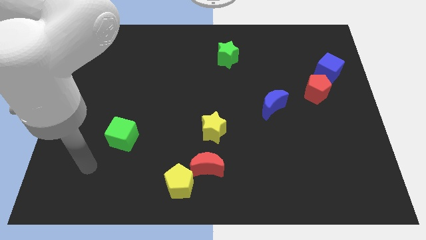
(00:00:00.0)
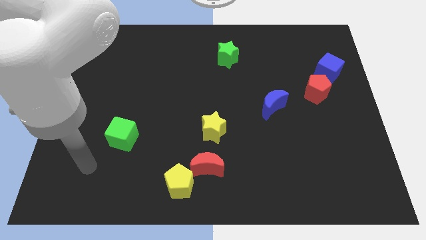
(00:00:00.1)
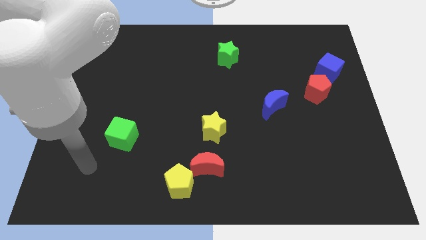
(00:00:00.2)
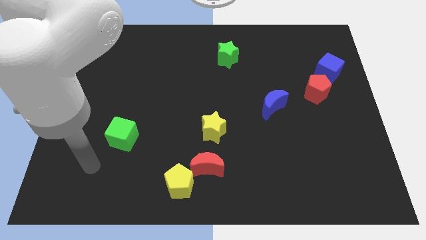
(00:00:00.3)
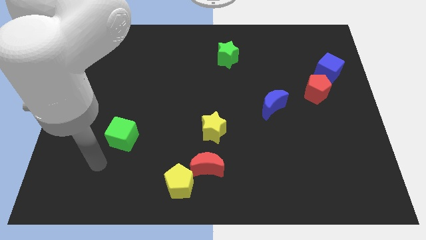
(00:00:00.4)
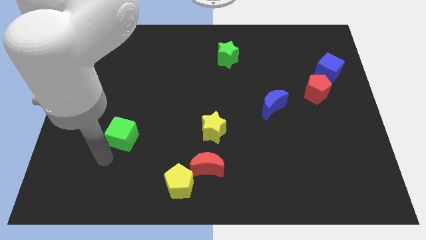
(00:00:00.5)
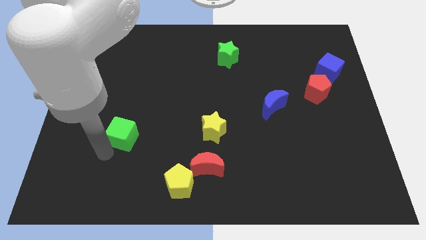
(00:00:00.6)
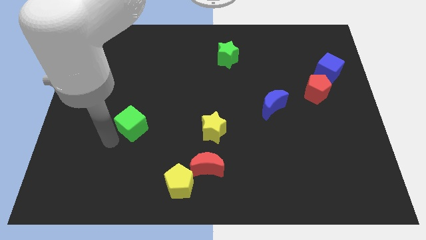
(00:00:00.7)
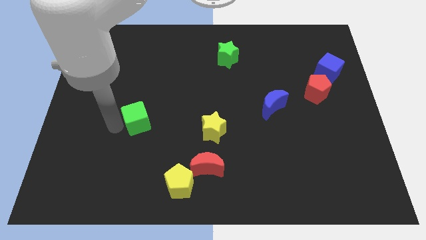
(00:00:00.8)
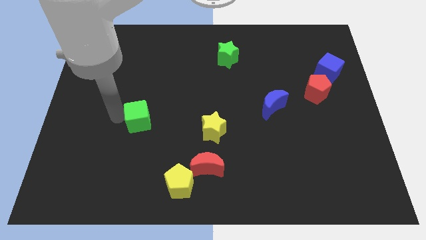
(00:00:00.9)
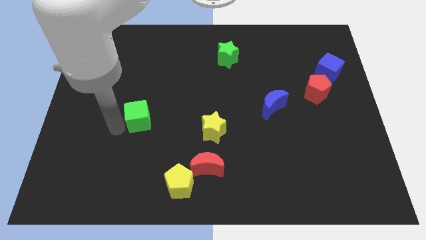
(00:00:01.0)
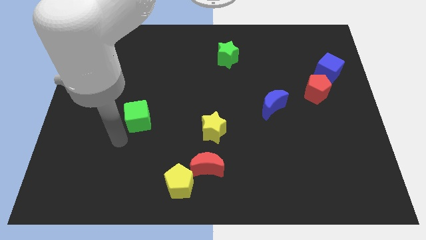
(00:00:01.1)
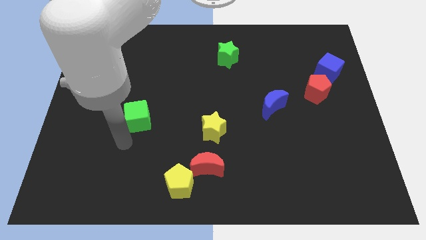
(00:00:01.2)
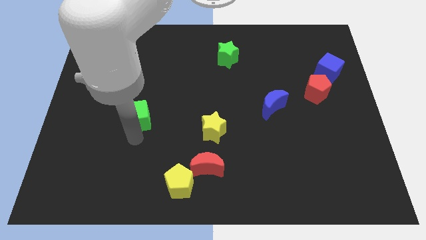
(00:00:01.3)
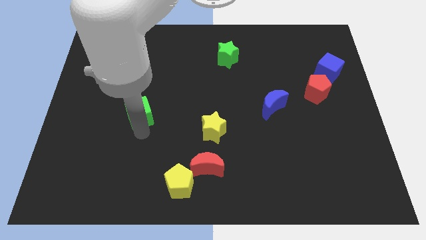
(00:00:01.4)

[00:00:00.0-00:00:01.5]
push green cube slightly upwards

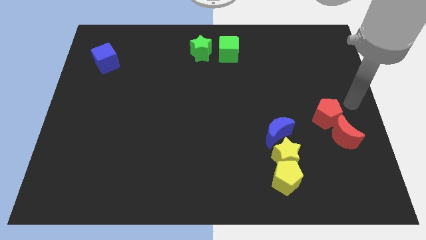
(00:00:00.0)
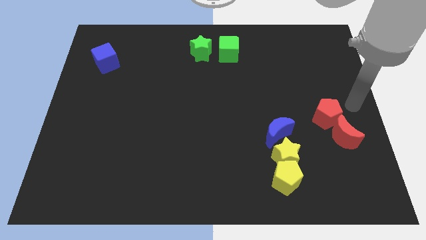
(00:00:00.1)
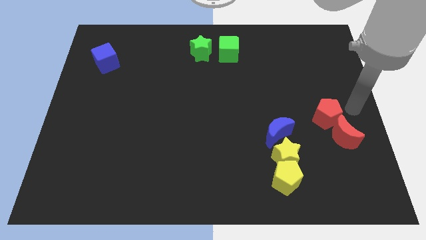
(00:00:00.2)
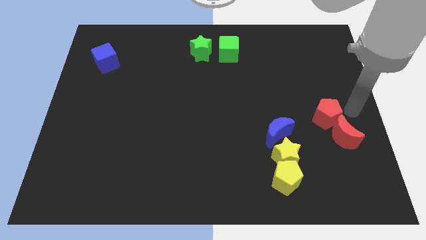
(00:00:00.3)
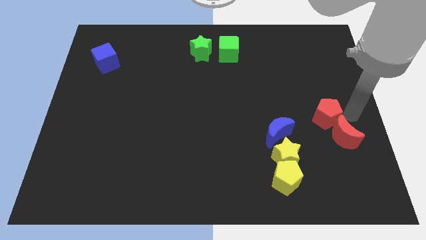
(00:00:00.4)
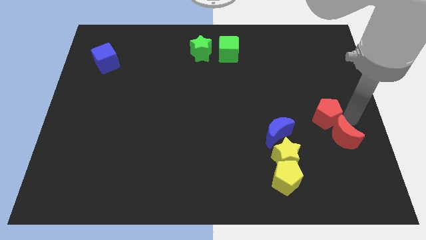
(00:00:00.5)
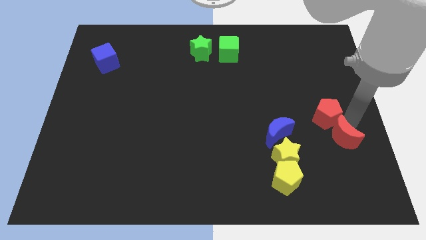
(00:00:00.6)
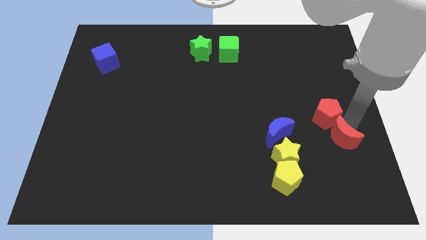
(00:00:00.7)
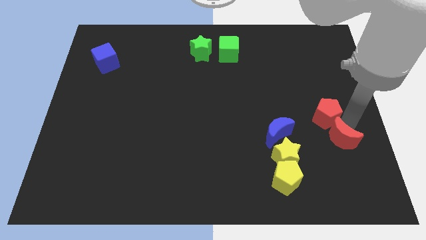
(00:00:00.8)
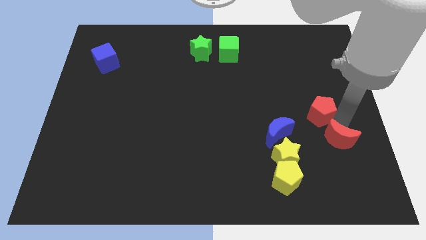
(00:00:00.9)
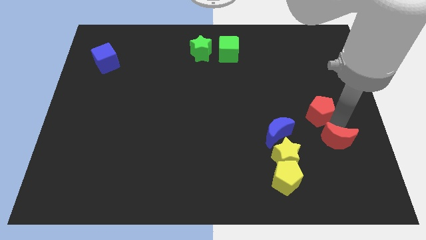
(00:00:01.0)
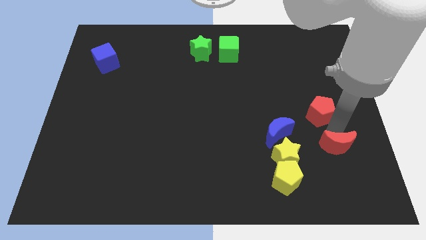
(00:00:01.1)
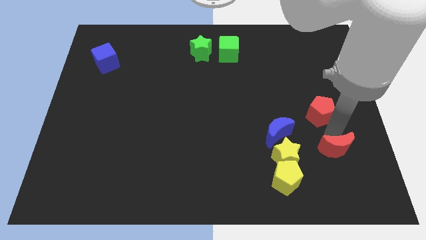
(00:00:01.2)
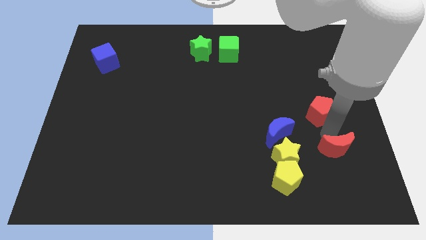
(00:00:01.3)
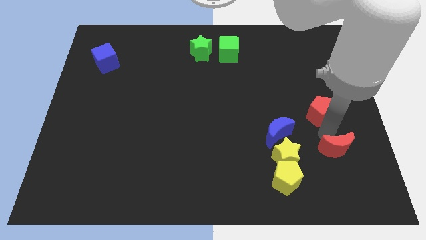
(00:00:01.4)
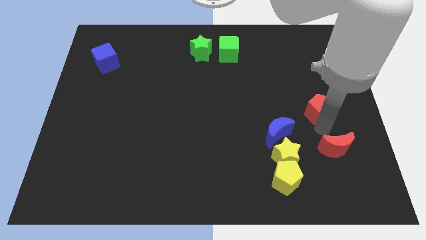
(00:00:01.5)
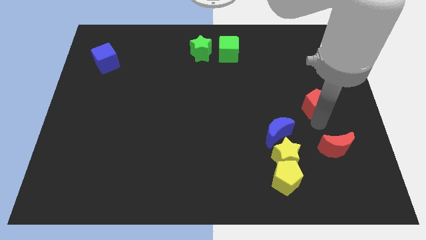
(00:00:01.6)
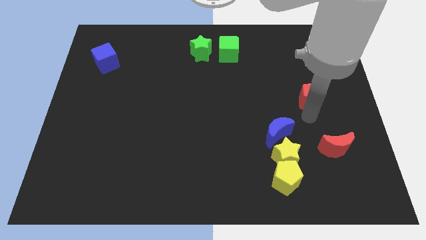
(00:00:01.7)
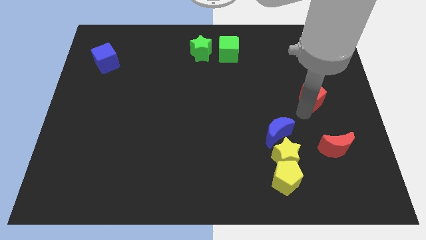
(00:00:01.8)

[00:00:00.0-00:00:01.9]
separate two red blocks

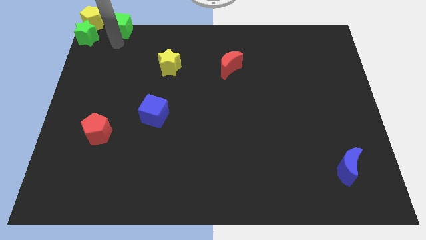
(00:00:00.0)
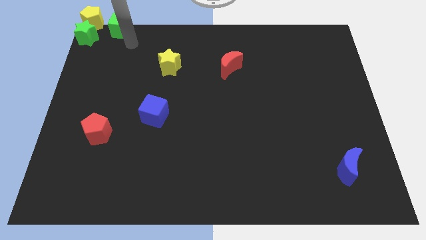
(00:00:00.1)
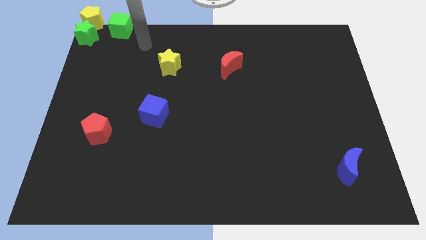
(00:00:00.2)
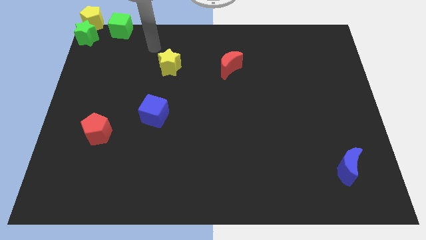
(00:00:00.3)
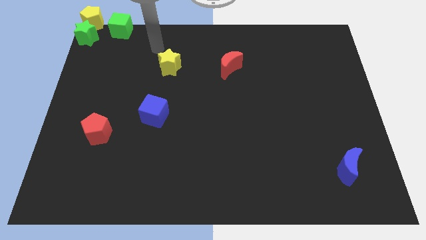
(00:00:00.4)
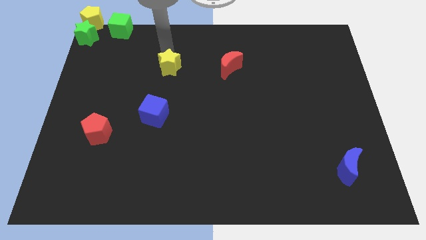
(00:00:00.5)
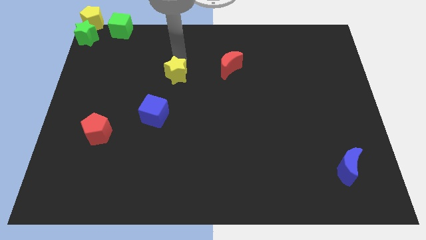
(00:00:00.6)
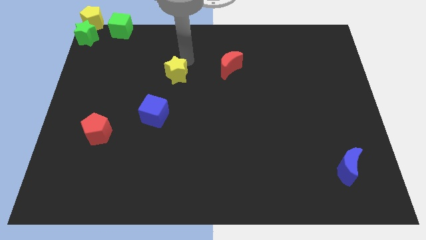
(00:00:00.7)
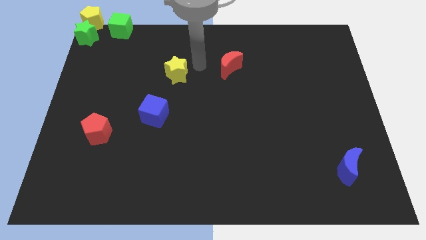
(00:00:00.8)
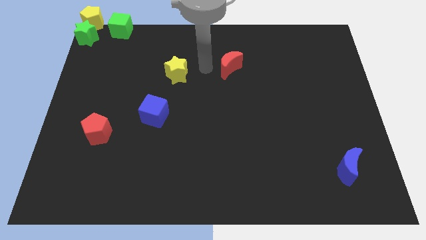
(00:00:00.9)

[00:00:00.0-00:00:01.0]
tap the yellow pentagon

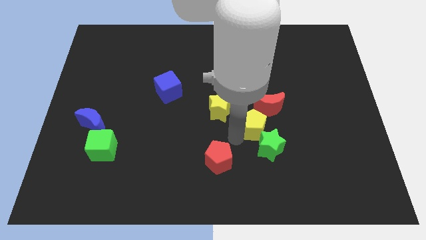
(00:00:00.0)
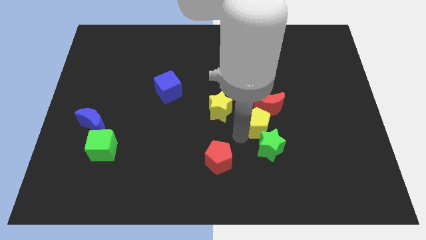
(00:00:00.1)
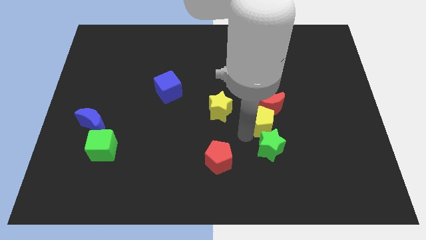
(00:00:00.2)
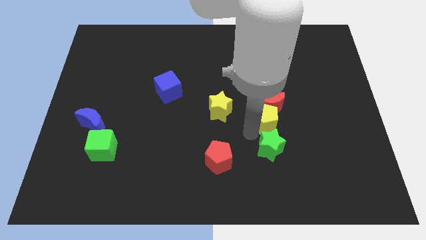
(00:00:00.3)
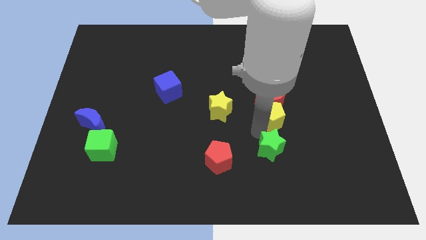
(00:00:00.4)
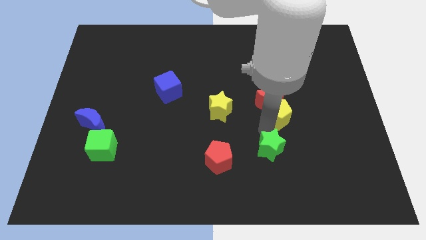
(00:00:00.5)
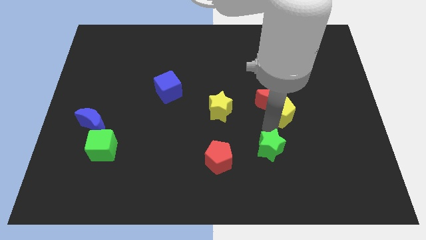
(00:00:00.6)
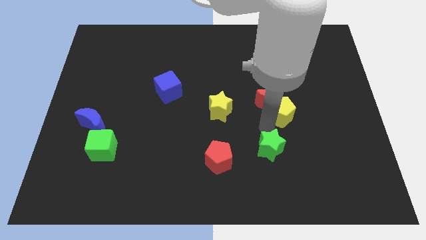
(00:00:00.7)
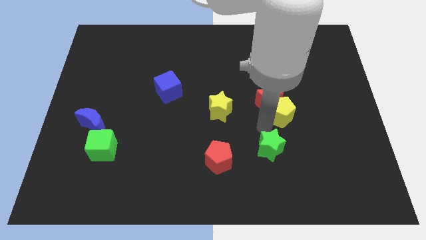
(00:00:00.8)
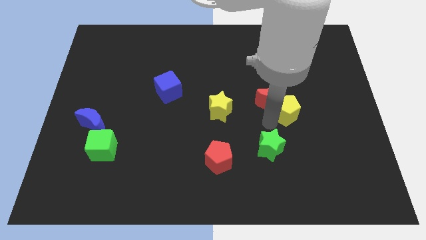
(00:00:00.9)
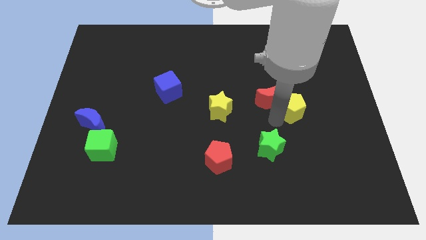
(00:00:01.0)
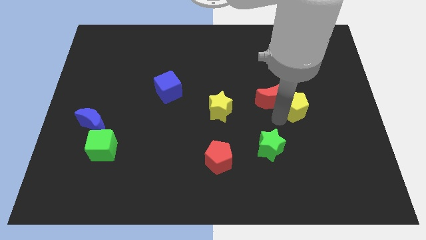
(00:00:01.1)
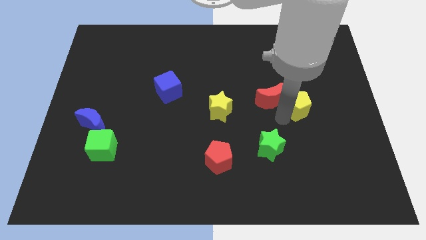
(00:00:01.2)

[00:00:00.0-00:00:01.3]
separate the yellow pentagon from the yellow star

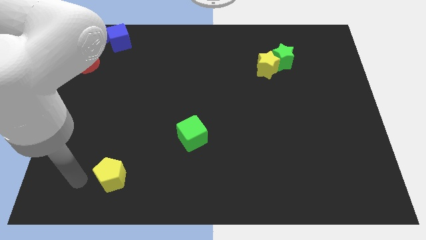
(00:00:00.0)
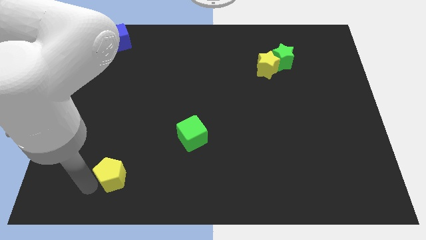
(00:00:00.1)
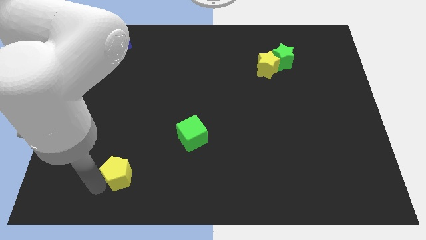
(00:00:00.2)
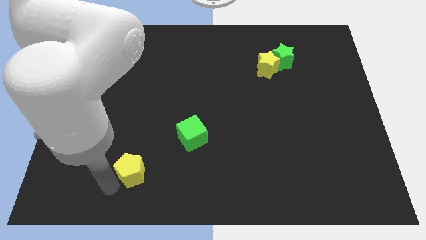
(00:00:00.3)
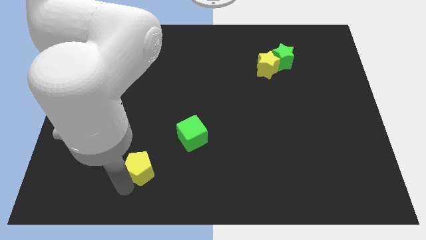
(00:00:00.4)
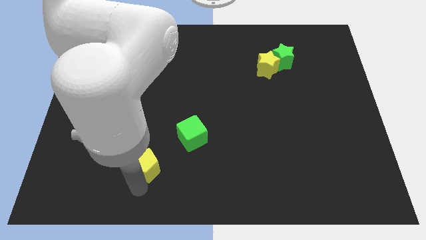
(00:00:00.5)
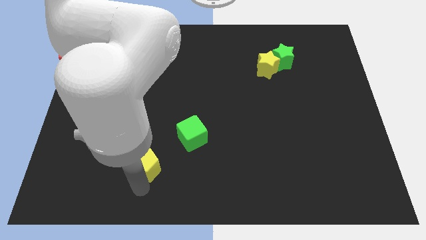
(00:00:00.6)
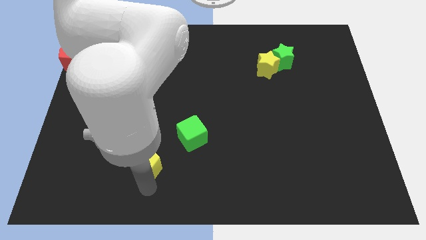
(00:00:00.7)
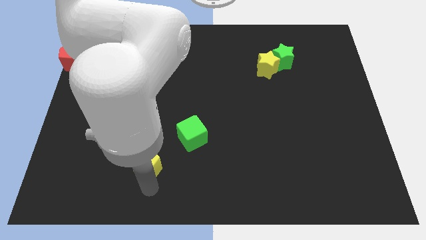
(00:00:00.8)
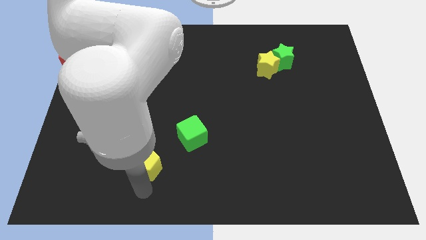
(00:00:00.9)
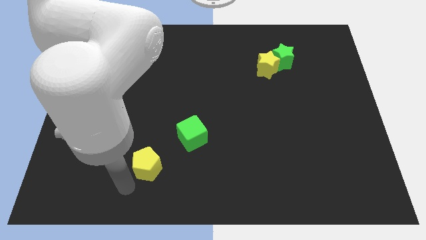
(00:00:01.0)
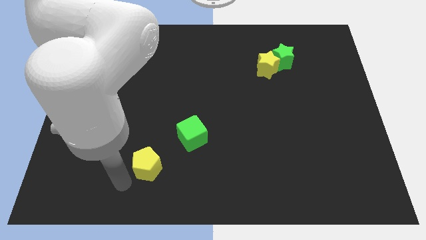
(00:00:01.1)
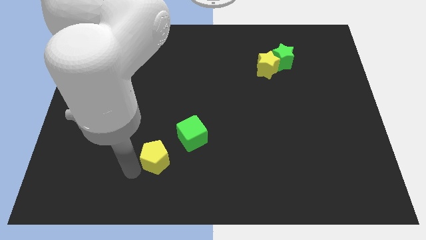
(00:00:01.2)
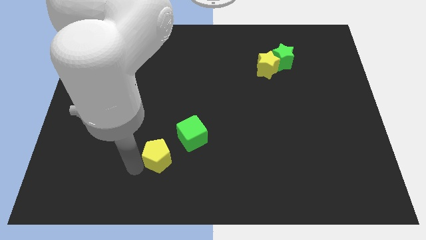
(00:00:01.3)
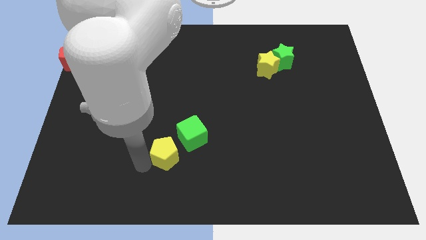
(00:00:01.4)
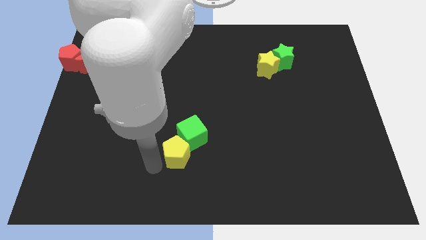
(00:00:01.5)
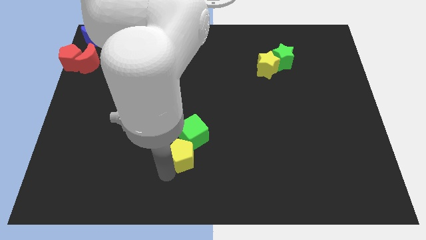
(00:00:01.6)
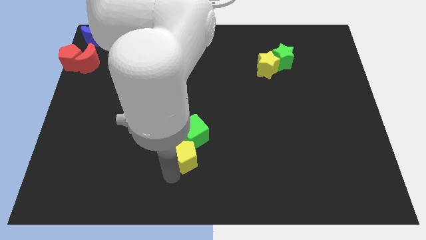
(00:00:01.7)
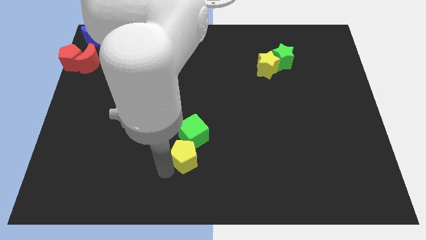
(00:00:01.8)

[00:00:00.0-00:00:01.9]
push the yellow pentagon into the green cube

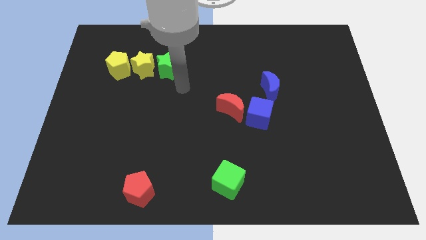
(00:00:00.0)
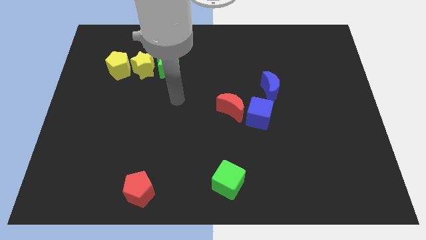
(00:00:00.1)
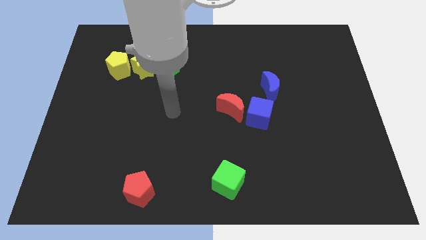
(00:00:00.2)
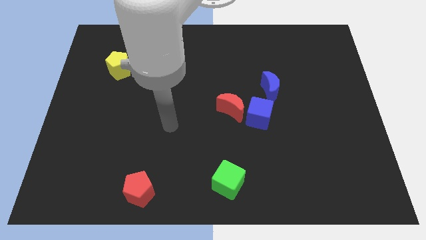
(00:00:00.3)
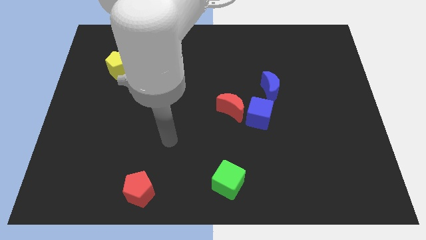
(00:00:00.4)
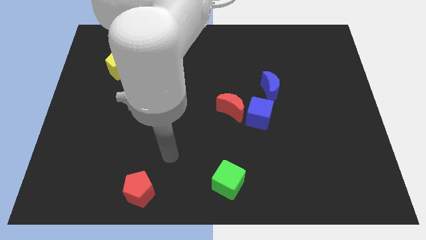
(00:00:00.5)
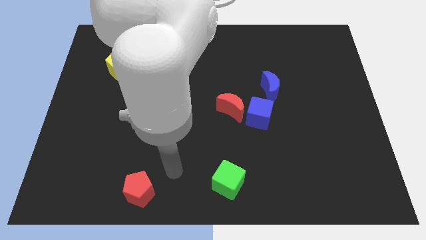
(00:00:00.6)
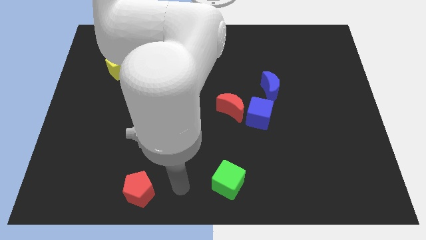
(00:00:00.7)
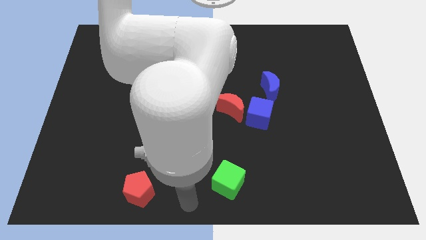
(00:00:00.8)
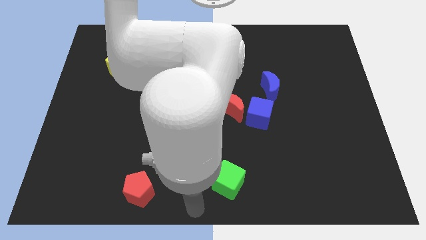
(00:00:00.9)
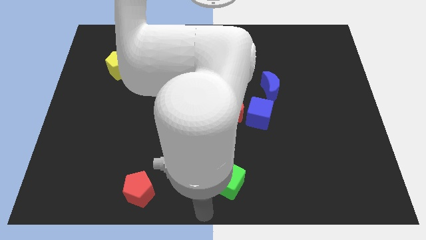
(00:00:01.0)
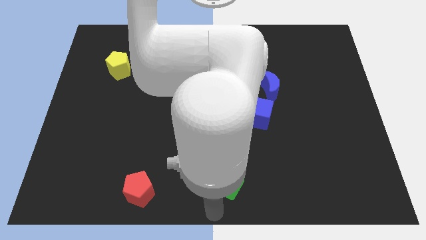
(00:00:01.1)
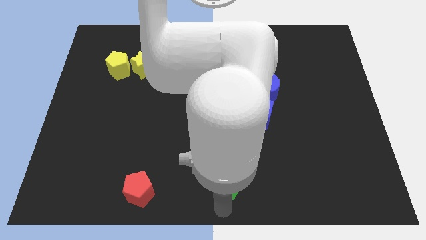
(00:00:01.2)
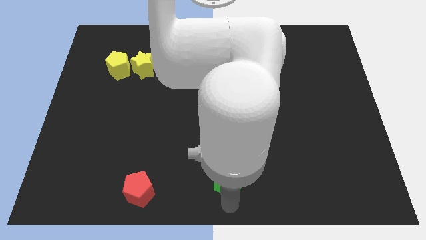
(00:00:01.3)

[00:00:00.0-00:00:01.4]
move your arm to the below to the green cube
